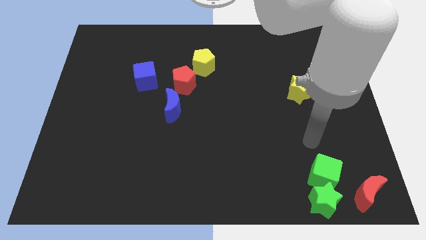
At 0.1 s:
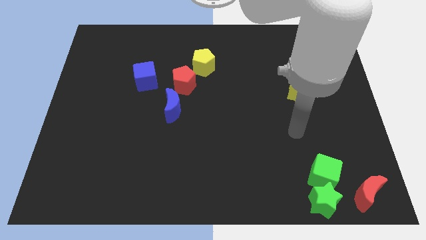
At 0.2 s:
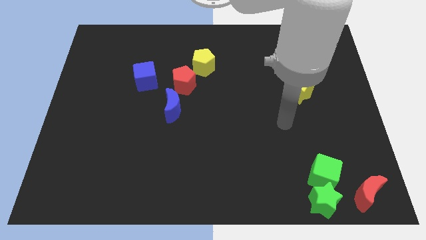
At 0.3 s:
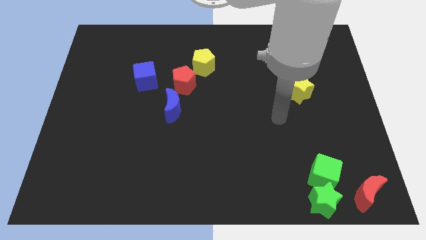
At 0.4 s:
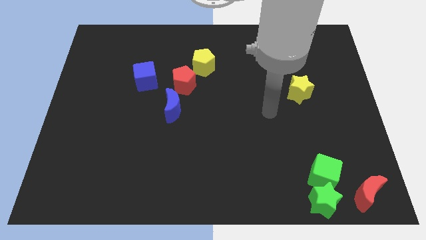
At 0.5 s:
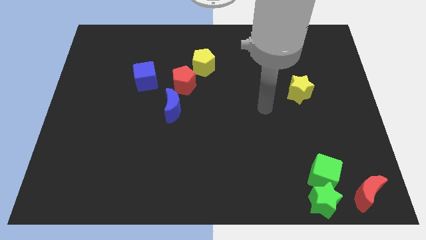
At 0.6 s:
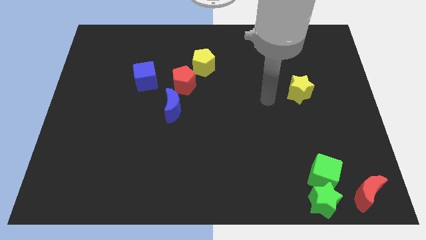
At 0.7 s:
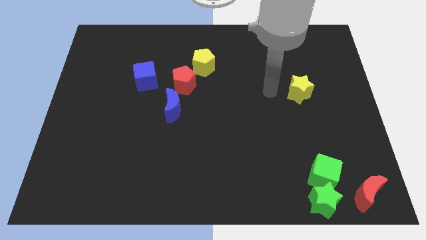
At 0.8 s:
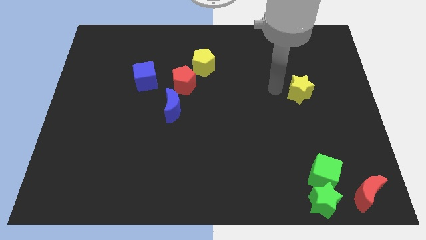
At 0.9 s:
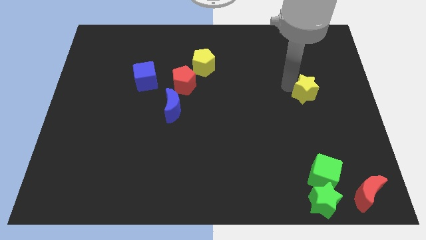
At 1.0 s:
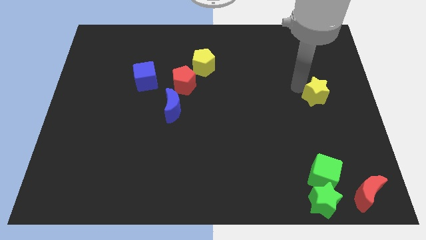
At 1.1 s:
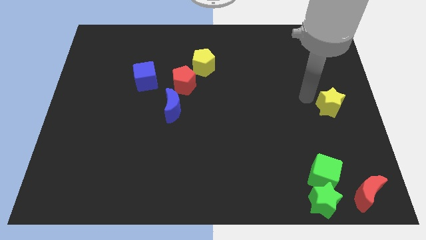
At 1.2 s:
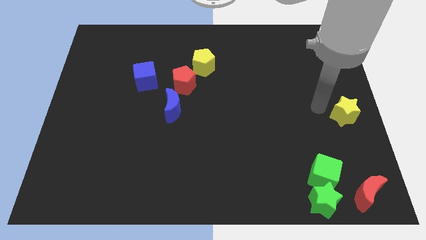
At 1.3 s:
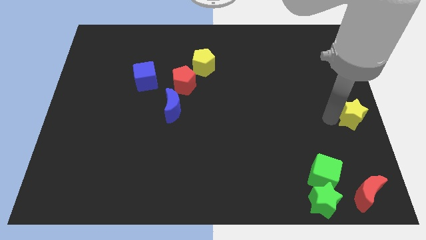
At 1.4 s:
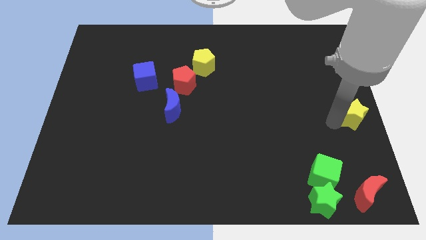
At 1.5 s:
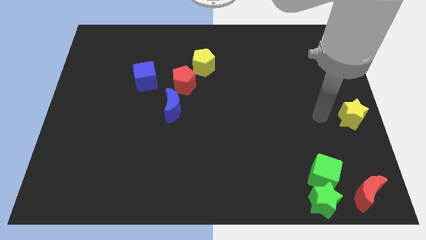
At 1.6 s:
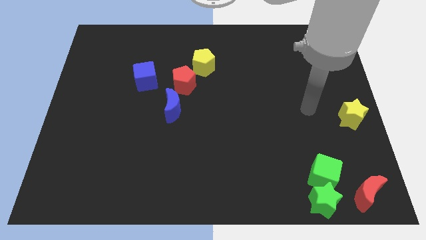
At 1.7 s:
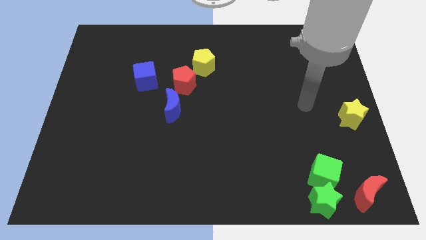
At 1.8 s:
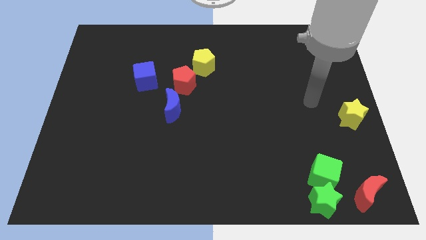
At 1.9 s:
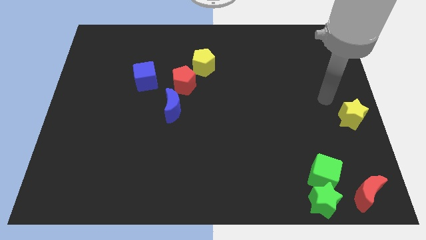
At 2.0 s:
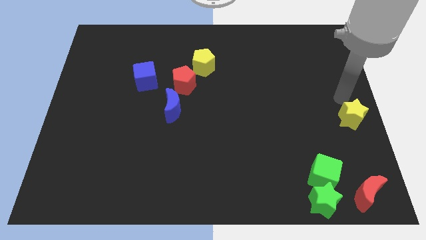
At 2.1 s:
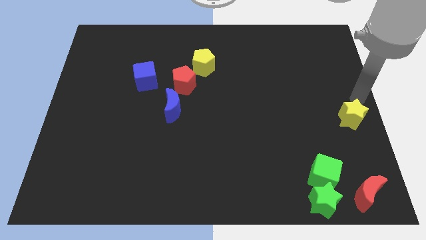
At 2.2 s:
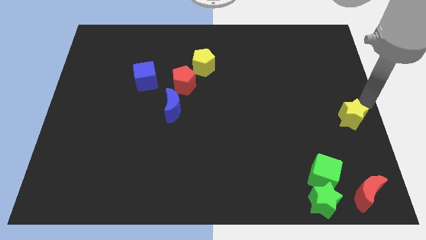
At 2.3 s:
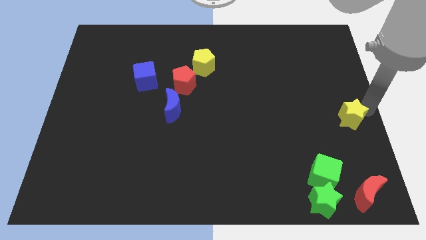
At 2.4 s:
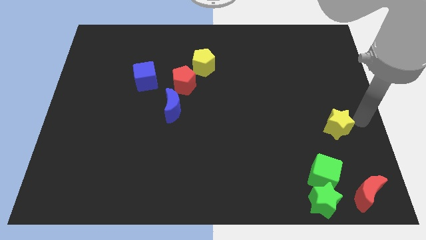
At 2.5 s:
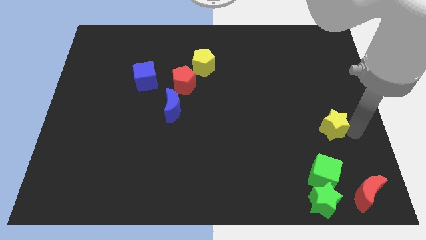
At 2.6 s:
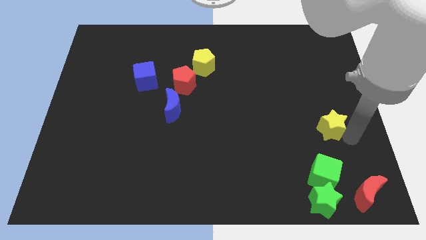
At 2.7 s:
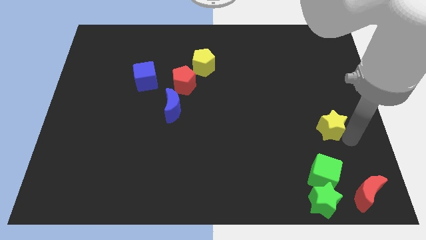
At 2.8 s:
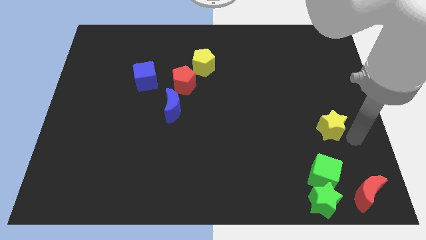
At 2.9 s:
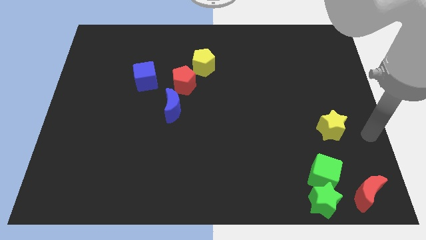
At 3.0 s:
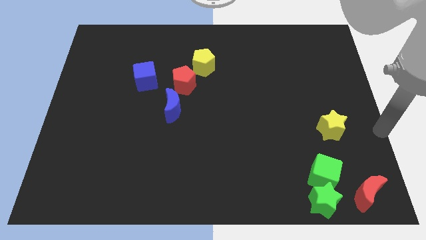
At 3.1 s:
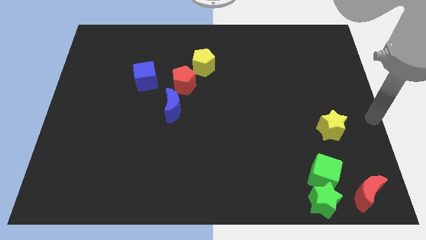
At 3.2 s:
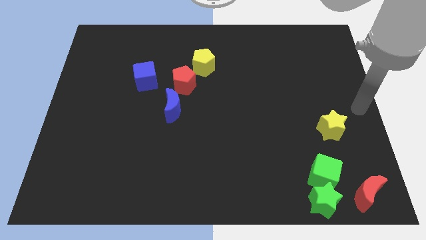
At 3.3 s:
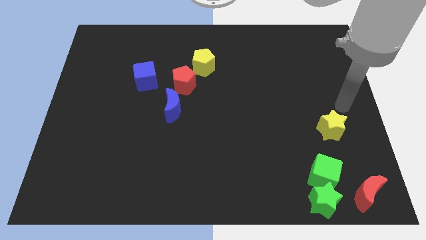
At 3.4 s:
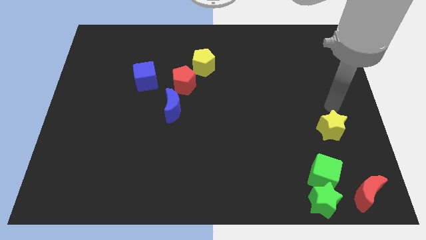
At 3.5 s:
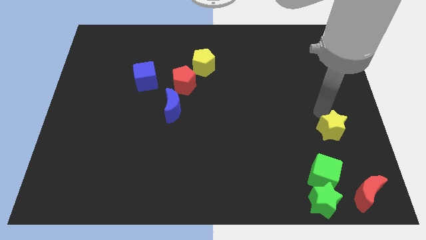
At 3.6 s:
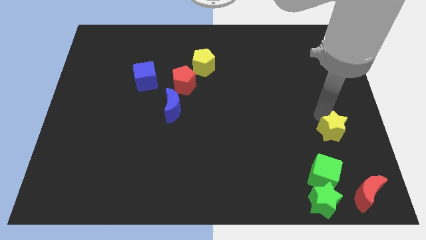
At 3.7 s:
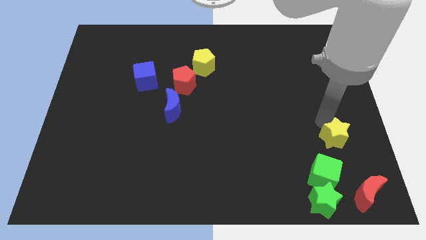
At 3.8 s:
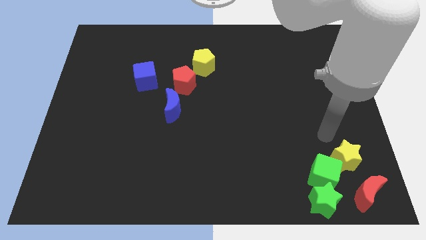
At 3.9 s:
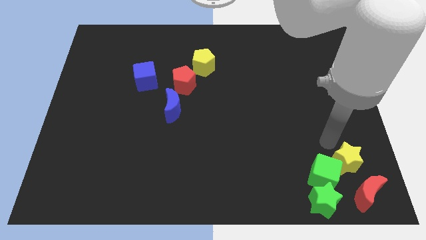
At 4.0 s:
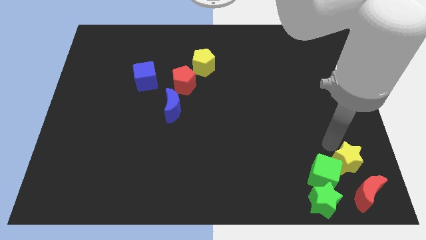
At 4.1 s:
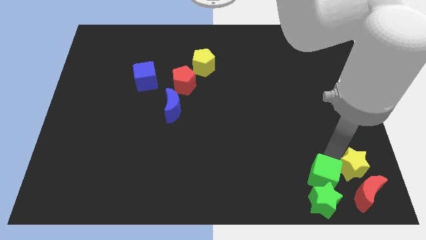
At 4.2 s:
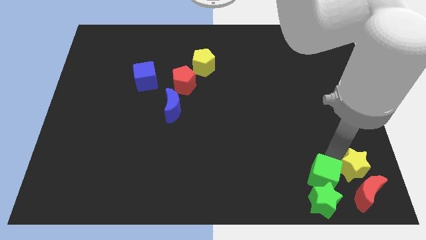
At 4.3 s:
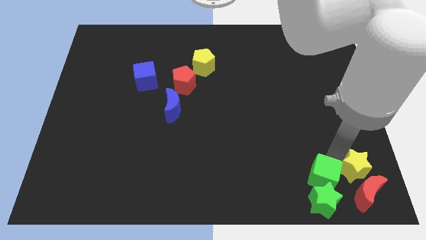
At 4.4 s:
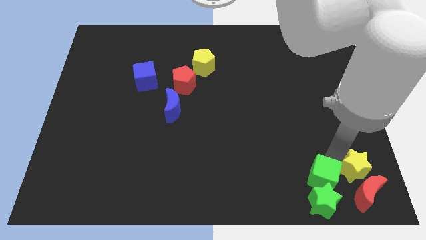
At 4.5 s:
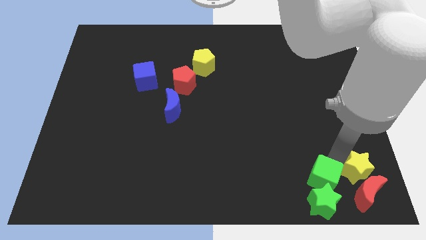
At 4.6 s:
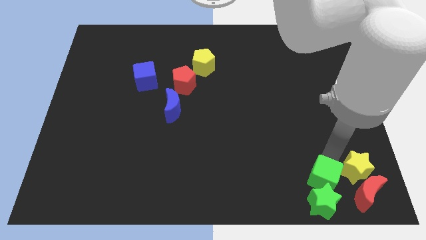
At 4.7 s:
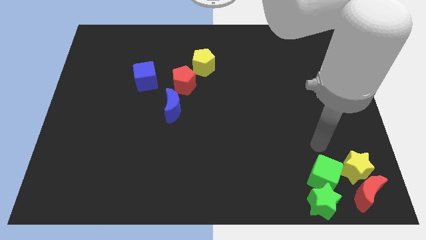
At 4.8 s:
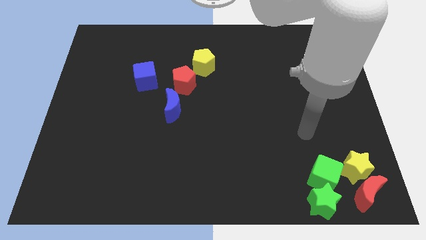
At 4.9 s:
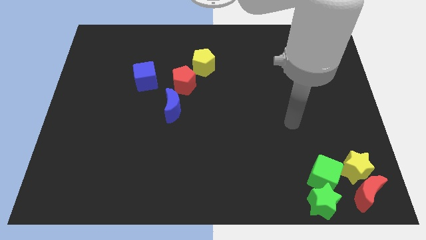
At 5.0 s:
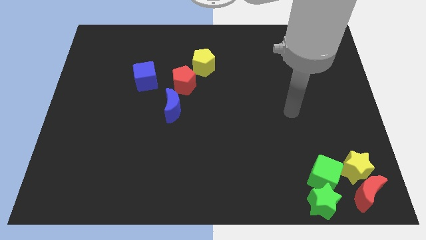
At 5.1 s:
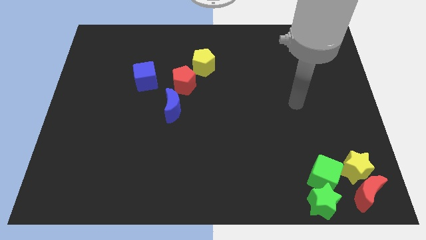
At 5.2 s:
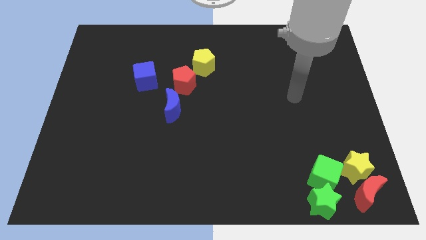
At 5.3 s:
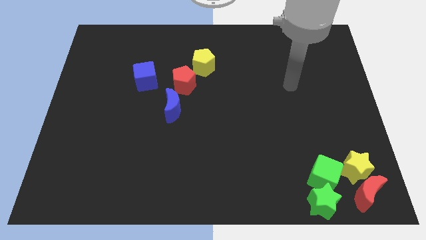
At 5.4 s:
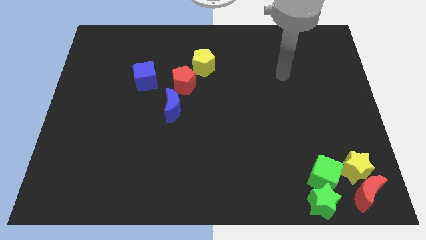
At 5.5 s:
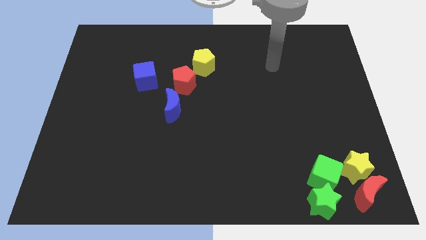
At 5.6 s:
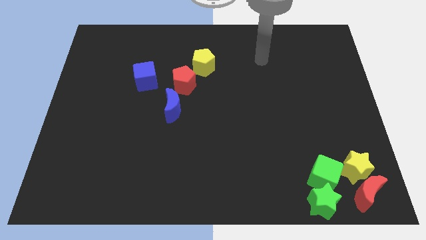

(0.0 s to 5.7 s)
place the yellow star above the red crescent

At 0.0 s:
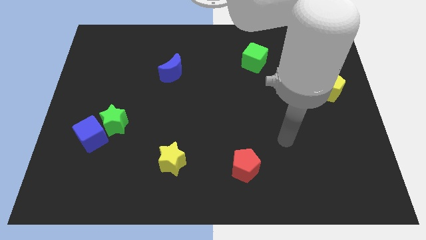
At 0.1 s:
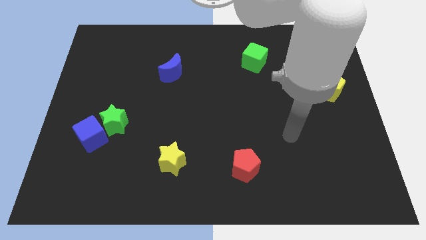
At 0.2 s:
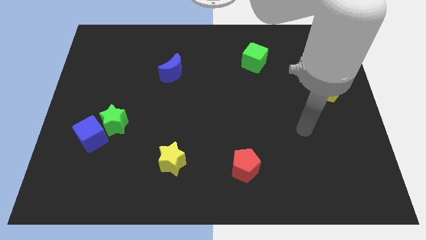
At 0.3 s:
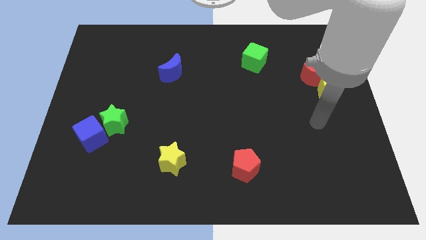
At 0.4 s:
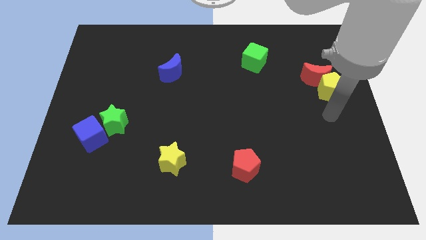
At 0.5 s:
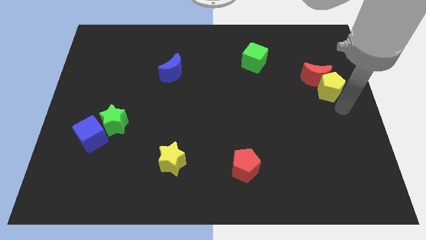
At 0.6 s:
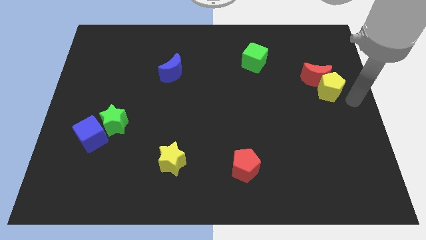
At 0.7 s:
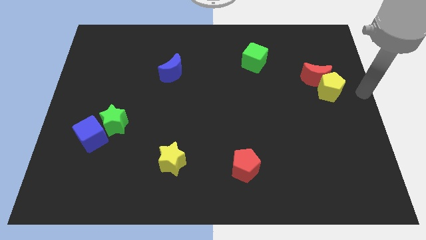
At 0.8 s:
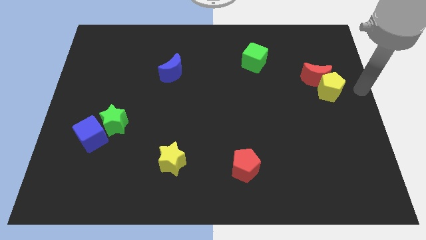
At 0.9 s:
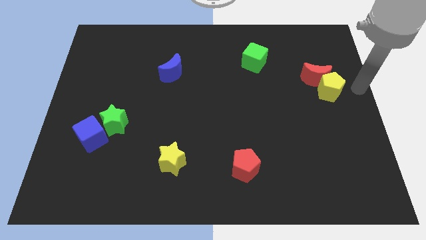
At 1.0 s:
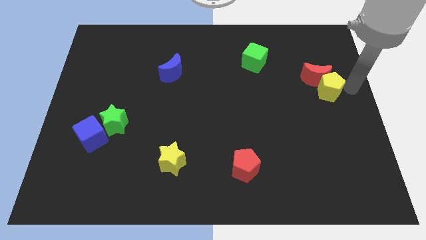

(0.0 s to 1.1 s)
point your hand at the right side of the yellow pentagon

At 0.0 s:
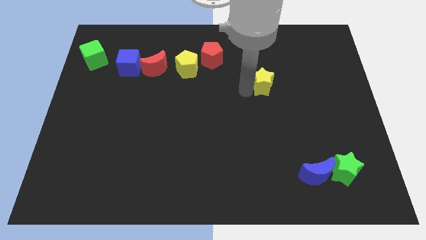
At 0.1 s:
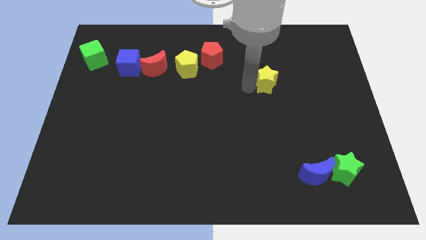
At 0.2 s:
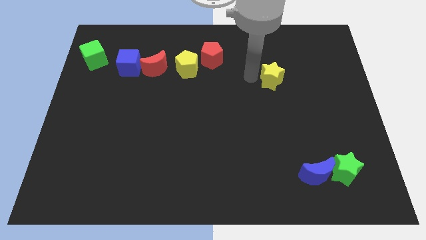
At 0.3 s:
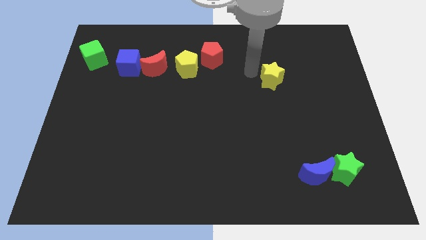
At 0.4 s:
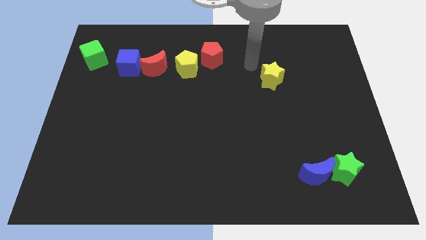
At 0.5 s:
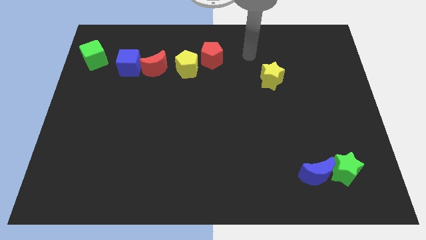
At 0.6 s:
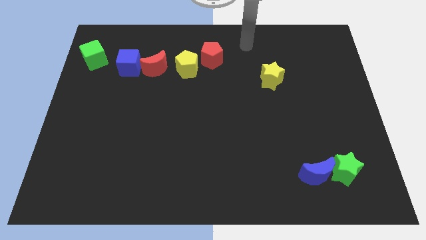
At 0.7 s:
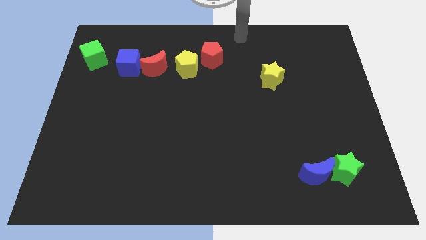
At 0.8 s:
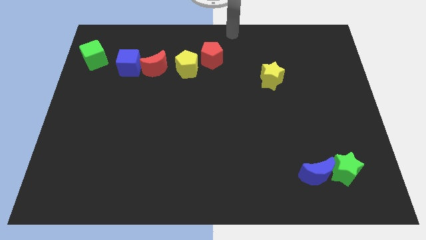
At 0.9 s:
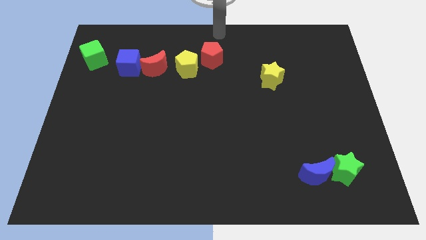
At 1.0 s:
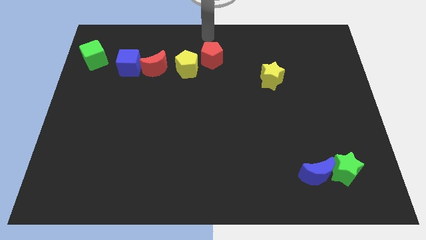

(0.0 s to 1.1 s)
point your arm at the top of red pentagon

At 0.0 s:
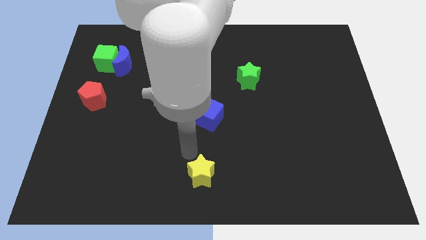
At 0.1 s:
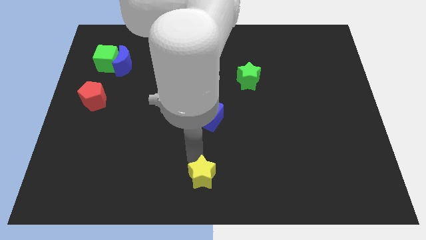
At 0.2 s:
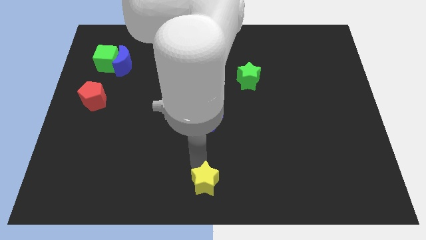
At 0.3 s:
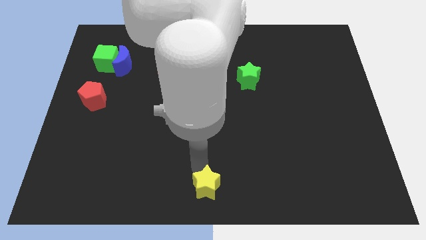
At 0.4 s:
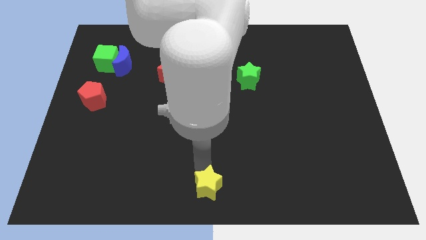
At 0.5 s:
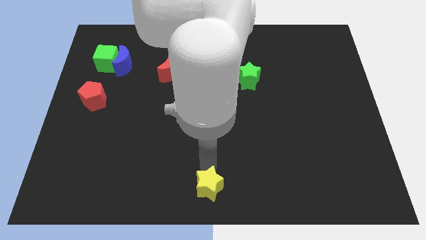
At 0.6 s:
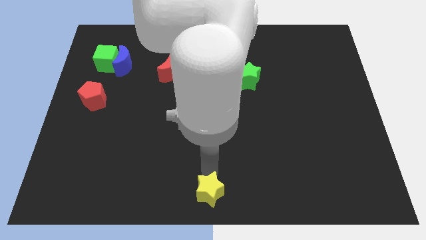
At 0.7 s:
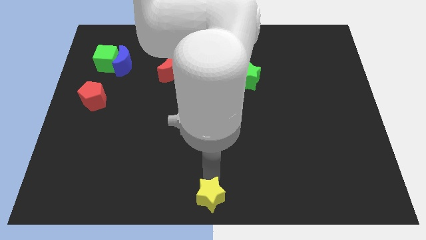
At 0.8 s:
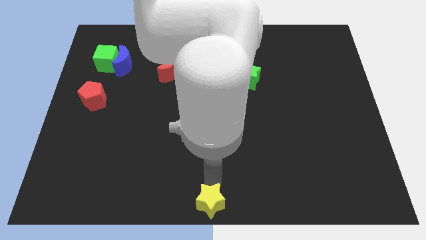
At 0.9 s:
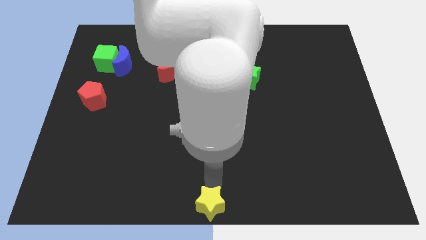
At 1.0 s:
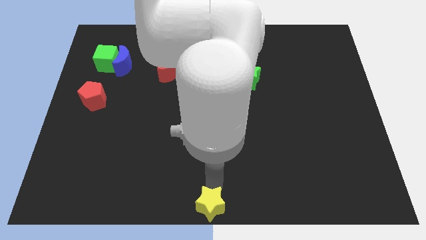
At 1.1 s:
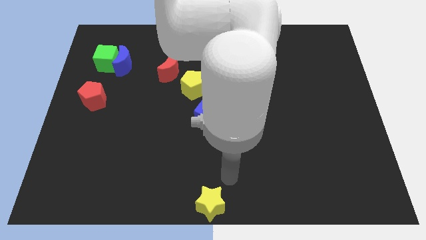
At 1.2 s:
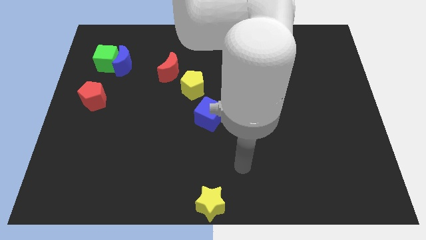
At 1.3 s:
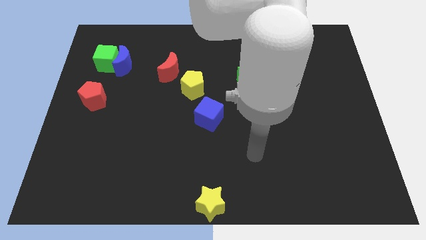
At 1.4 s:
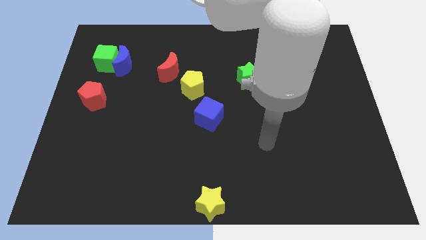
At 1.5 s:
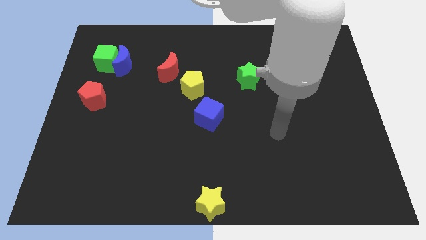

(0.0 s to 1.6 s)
push the yellow star to the bottom centre of the board
